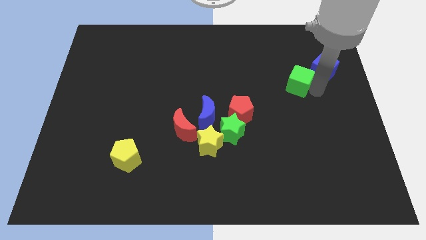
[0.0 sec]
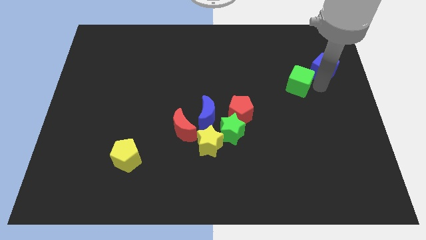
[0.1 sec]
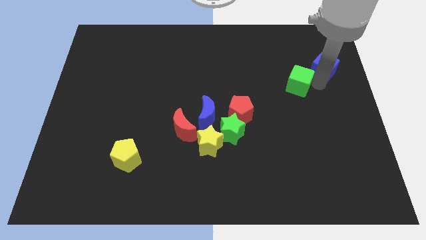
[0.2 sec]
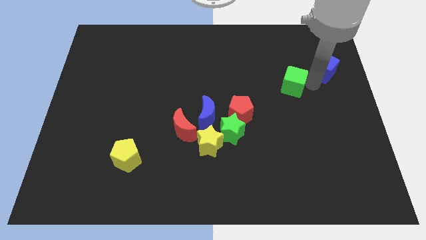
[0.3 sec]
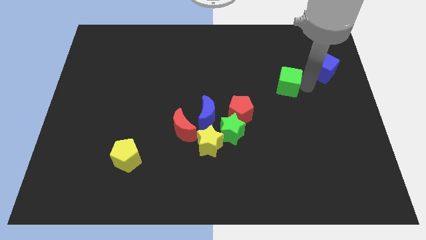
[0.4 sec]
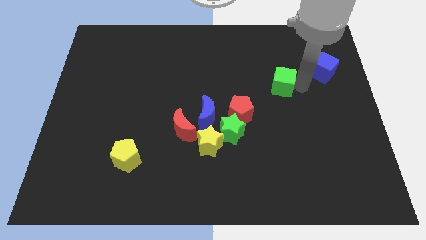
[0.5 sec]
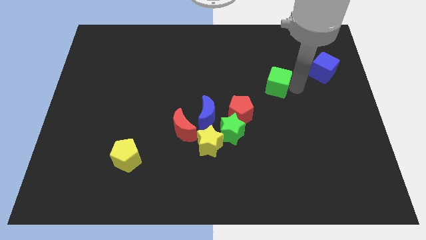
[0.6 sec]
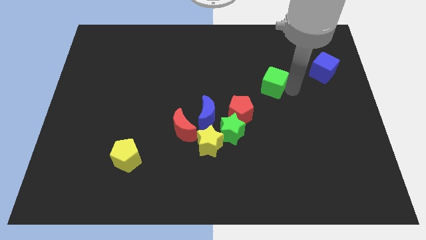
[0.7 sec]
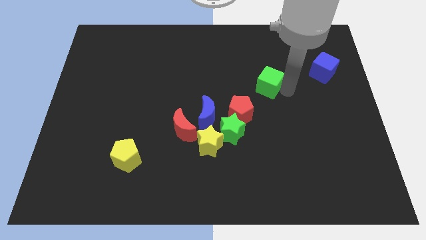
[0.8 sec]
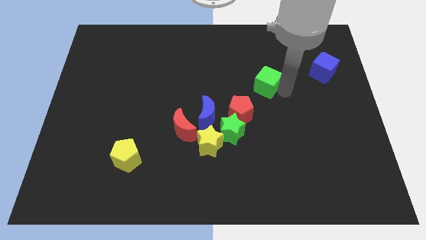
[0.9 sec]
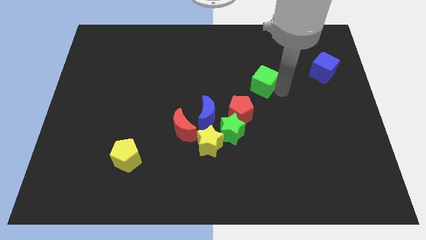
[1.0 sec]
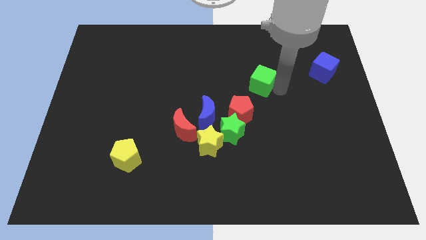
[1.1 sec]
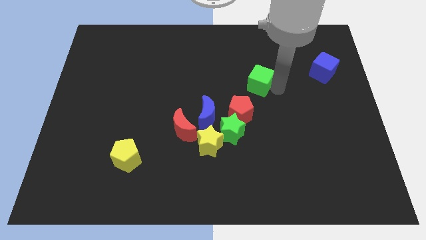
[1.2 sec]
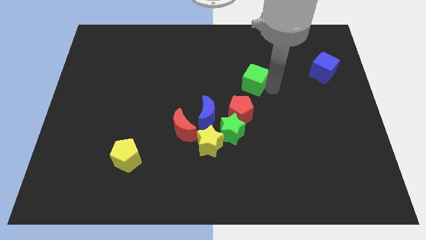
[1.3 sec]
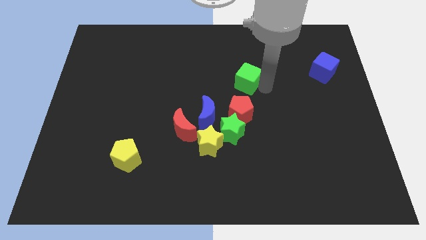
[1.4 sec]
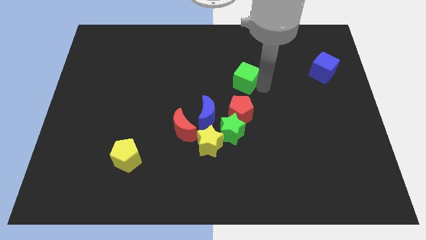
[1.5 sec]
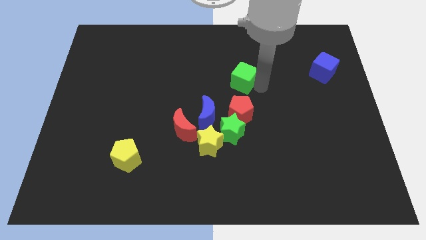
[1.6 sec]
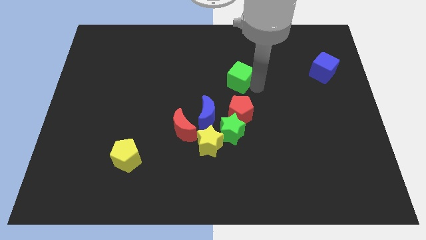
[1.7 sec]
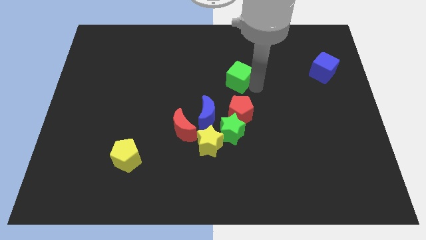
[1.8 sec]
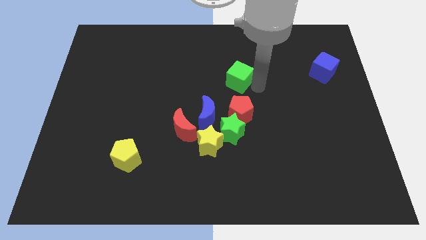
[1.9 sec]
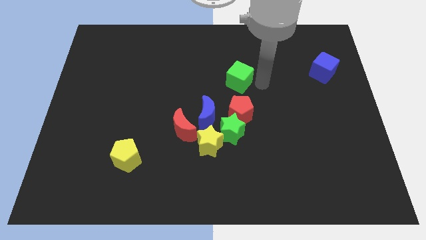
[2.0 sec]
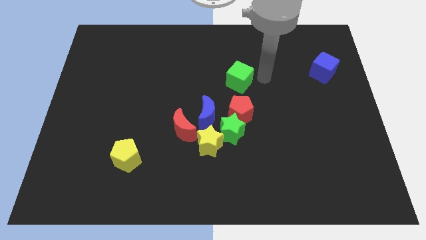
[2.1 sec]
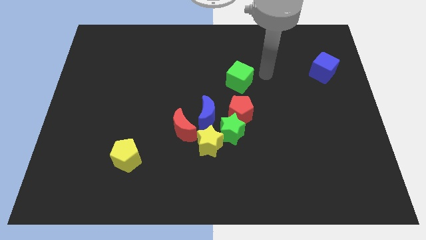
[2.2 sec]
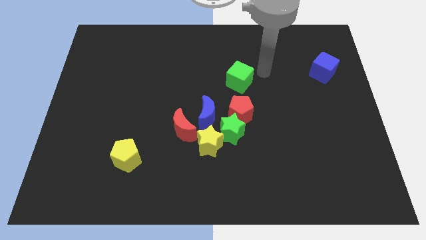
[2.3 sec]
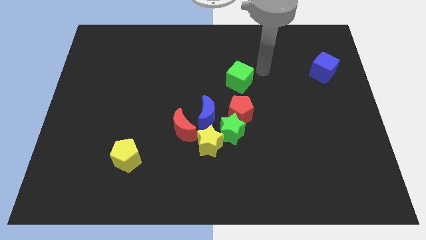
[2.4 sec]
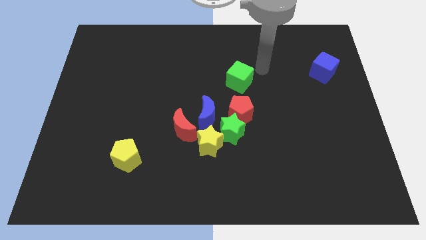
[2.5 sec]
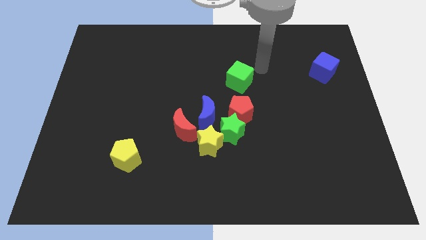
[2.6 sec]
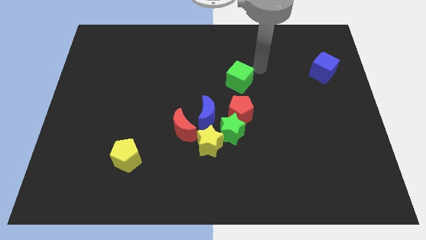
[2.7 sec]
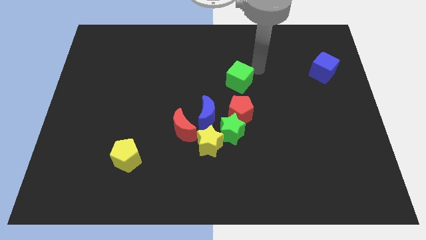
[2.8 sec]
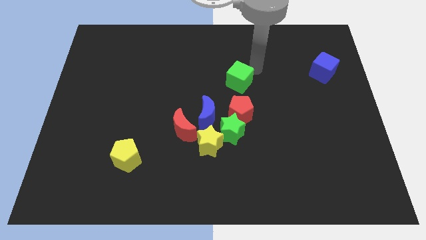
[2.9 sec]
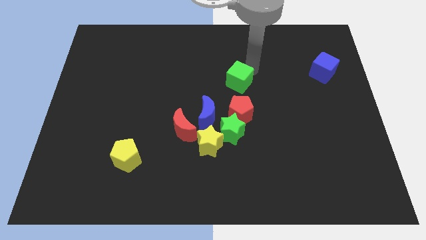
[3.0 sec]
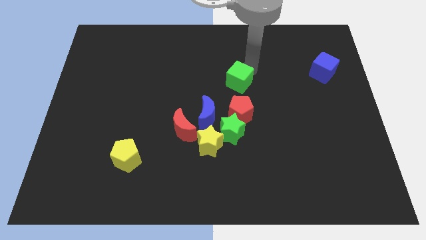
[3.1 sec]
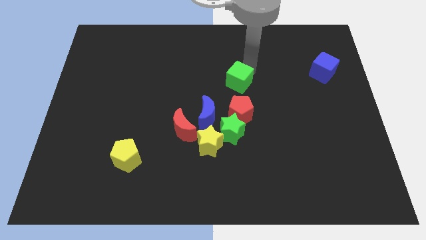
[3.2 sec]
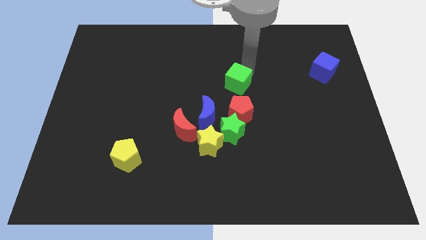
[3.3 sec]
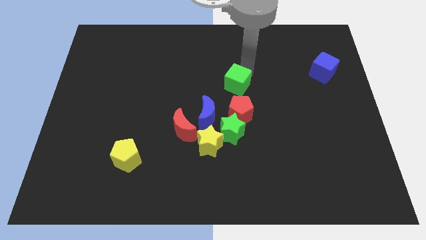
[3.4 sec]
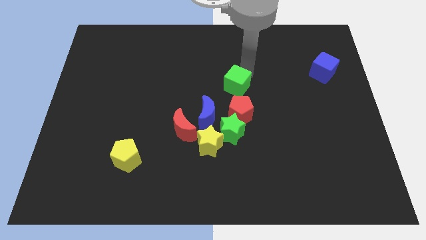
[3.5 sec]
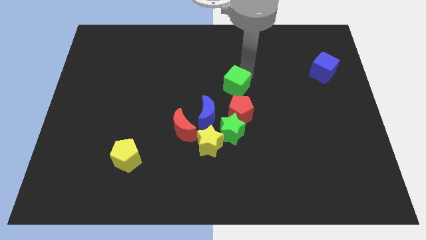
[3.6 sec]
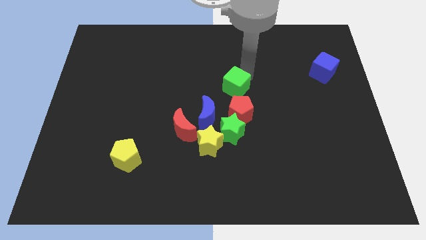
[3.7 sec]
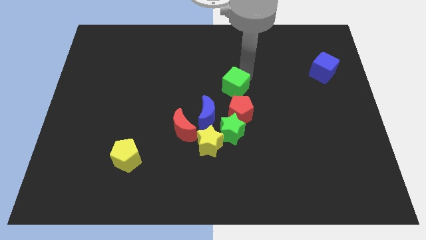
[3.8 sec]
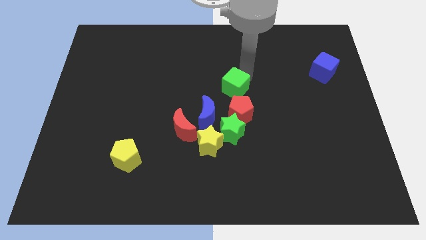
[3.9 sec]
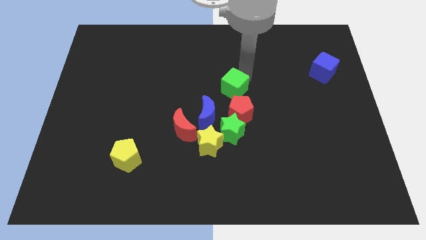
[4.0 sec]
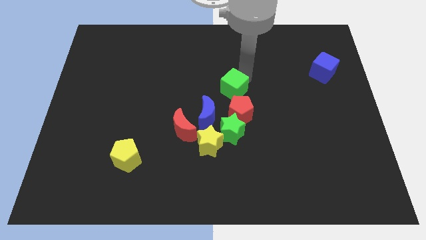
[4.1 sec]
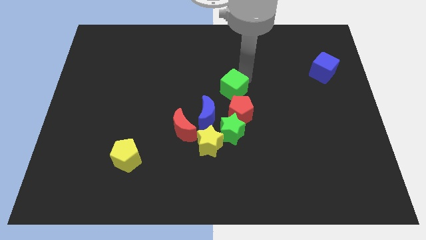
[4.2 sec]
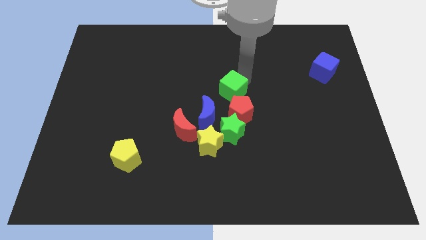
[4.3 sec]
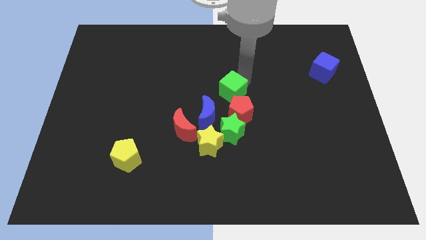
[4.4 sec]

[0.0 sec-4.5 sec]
place the green cube above the red pentagon

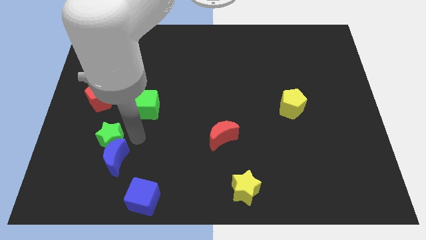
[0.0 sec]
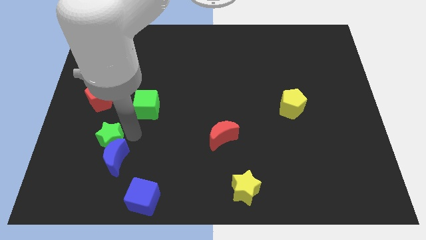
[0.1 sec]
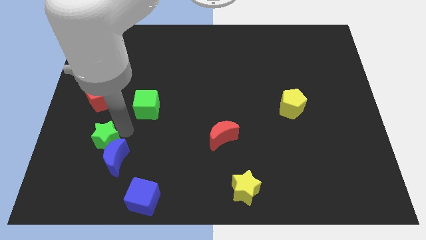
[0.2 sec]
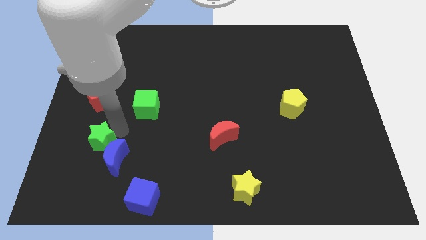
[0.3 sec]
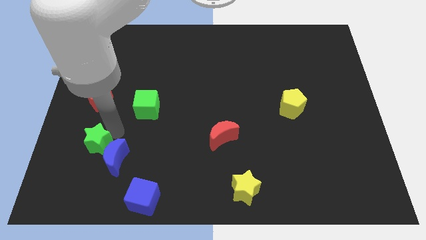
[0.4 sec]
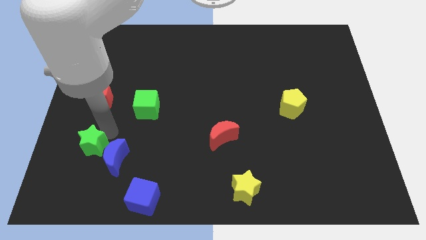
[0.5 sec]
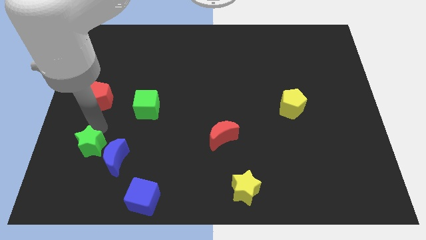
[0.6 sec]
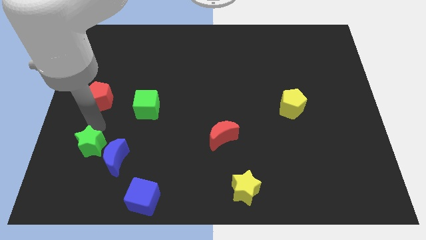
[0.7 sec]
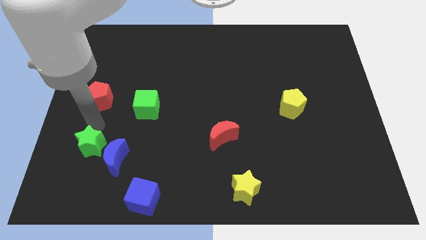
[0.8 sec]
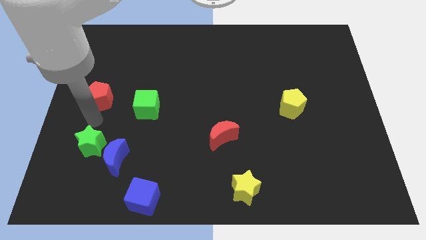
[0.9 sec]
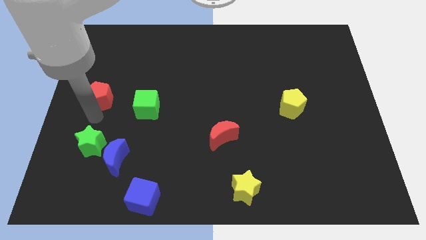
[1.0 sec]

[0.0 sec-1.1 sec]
push the green star towards the left side of the board

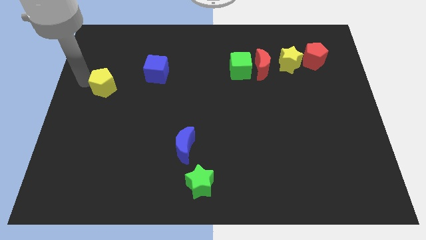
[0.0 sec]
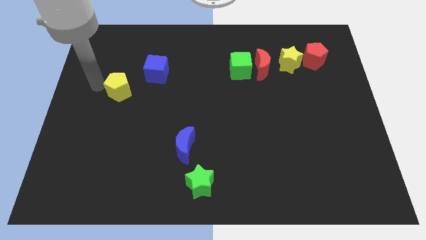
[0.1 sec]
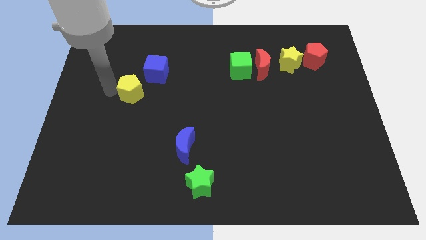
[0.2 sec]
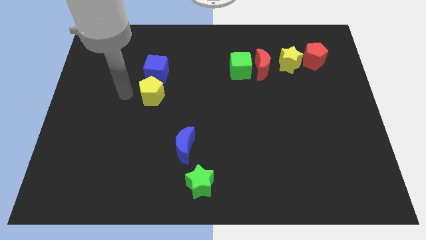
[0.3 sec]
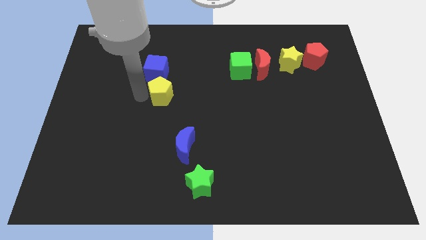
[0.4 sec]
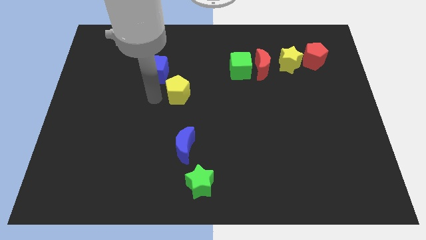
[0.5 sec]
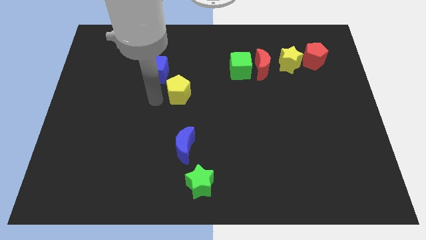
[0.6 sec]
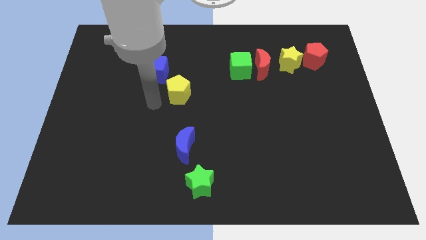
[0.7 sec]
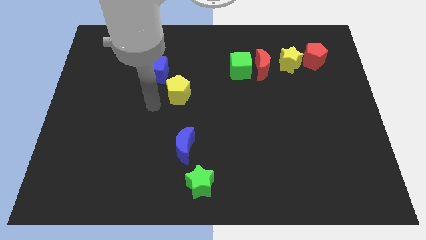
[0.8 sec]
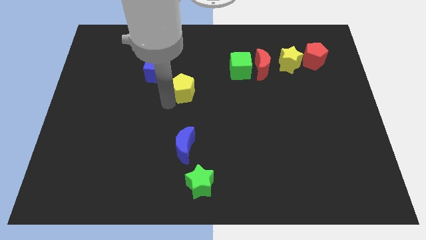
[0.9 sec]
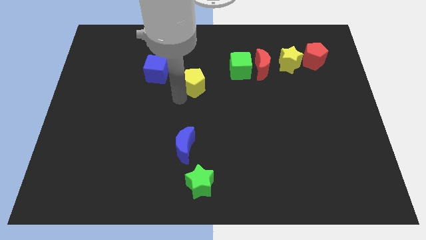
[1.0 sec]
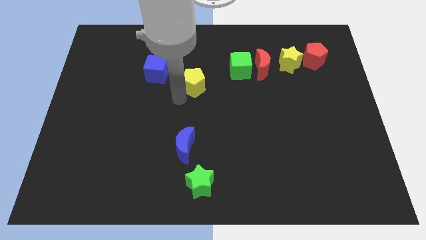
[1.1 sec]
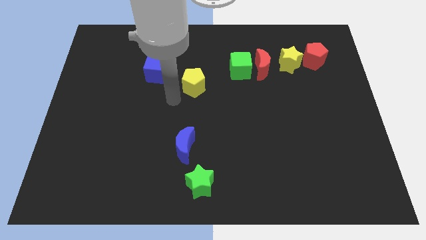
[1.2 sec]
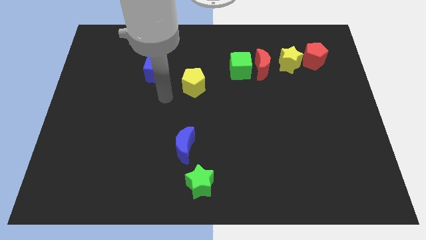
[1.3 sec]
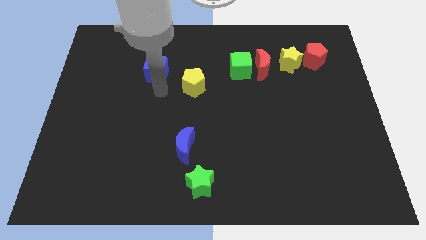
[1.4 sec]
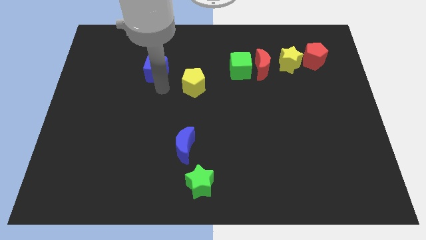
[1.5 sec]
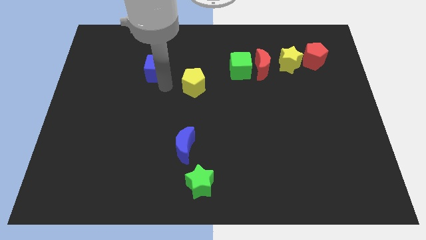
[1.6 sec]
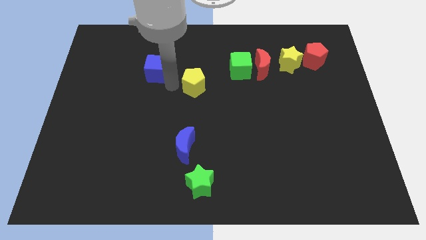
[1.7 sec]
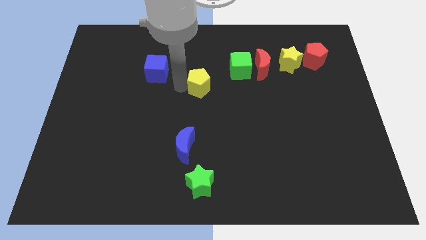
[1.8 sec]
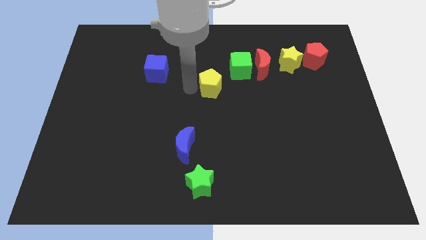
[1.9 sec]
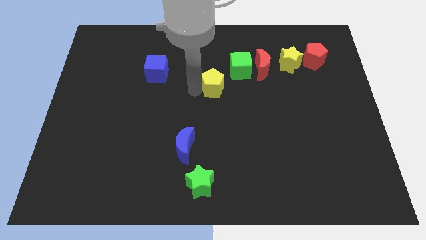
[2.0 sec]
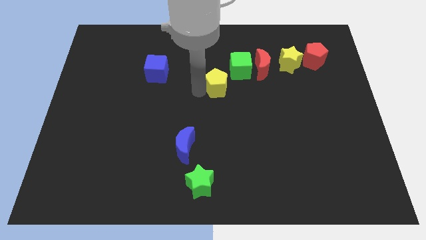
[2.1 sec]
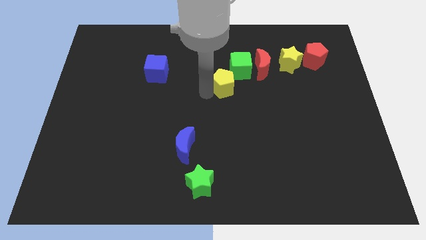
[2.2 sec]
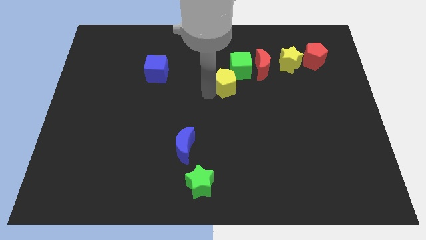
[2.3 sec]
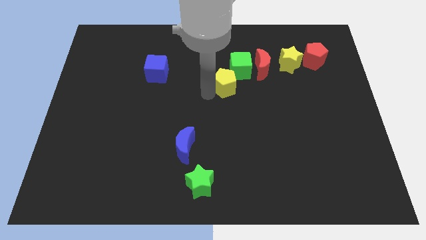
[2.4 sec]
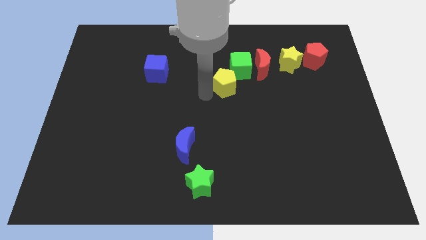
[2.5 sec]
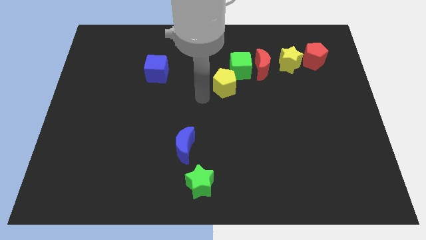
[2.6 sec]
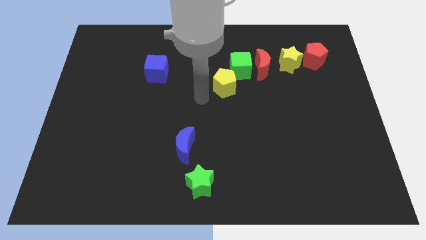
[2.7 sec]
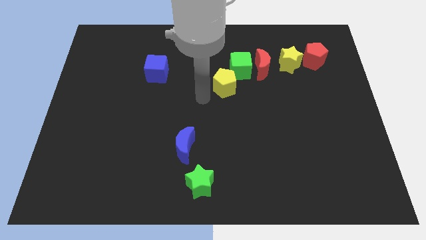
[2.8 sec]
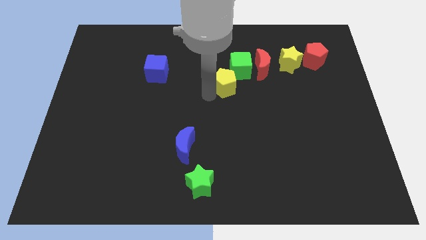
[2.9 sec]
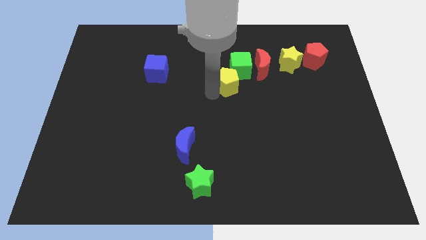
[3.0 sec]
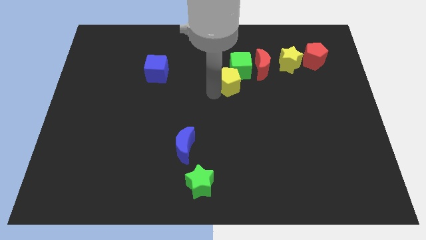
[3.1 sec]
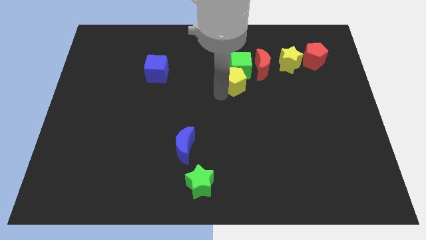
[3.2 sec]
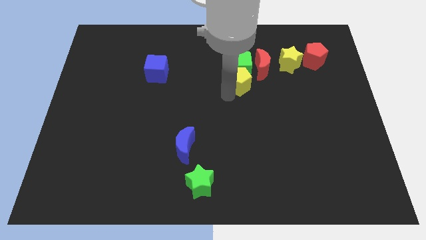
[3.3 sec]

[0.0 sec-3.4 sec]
move the yellow pentagon to the bottom of the green cube
